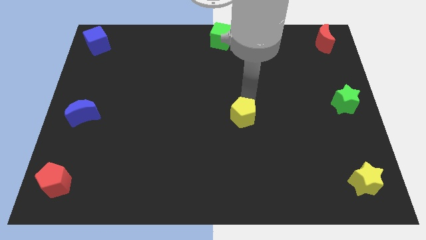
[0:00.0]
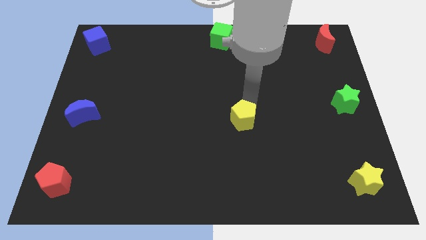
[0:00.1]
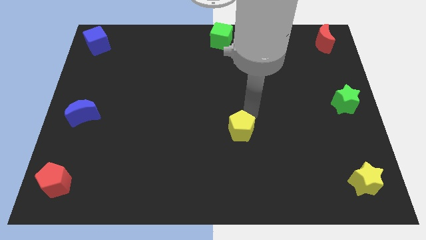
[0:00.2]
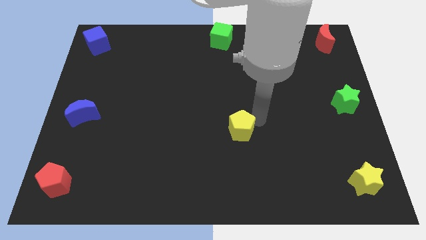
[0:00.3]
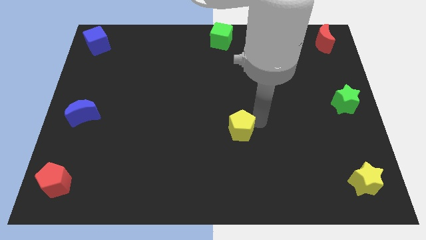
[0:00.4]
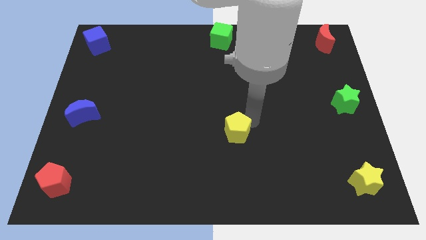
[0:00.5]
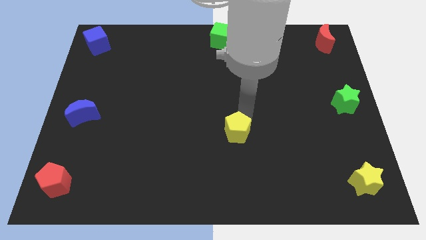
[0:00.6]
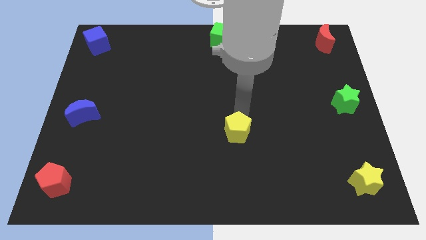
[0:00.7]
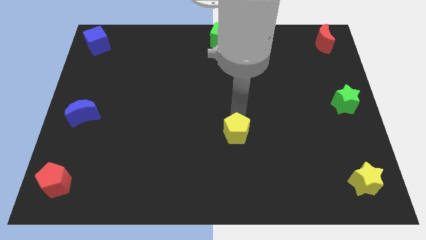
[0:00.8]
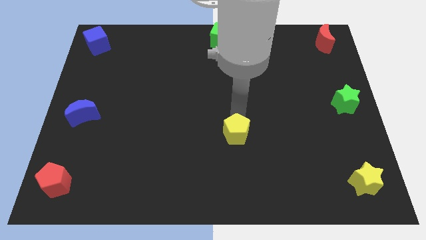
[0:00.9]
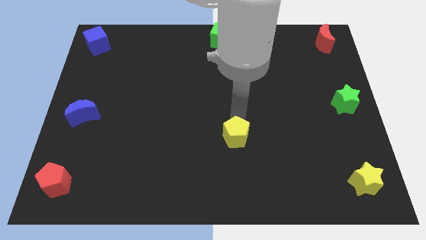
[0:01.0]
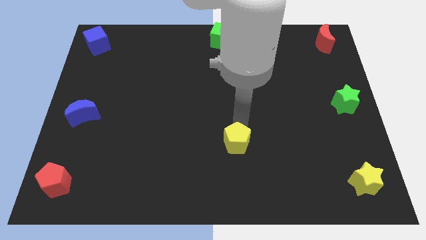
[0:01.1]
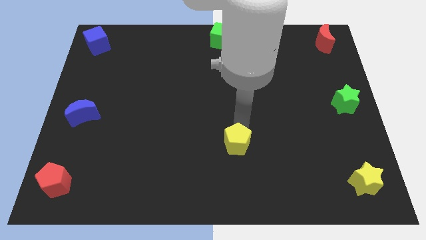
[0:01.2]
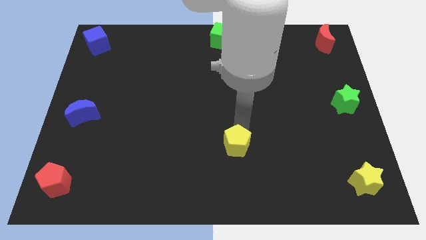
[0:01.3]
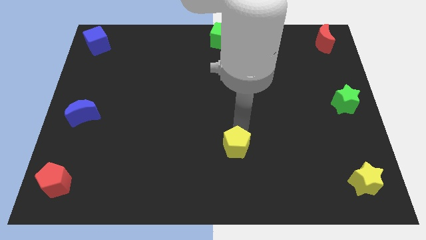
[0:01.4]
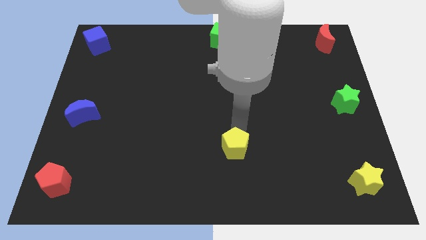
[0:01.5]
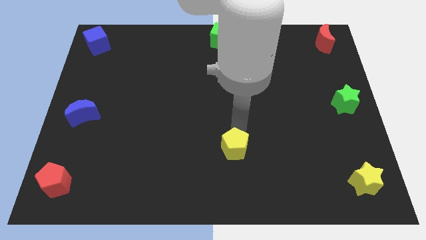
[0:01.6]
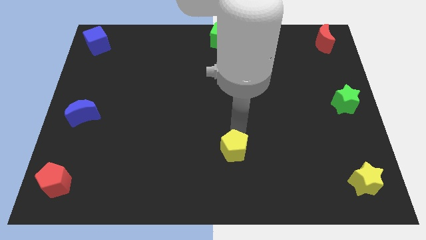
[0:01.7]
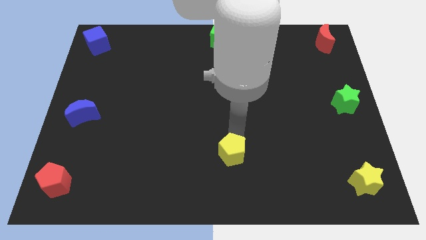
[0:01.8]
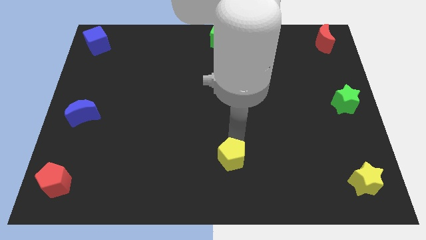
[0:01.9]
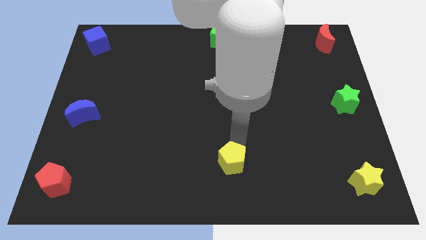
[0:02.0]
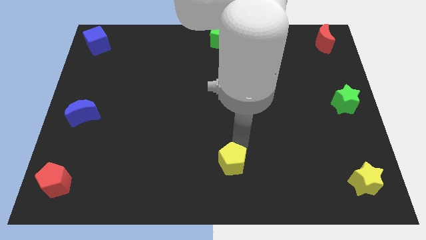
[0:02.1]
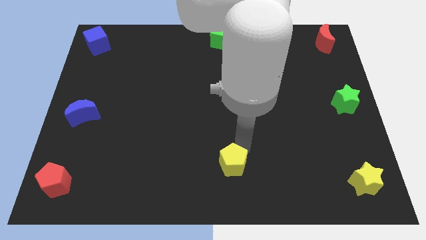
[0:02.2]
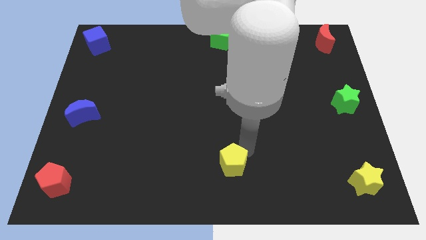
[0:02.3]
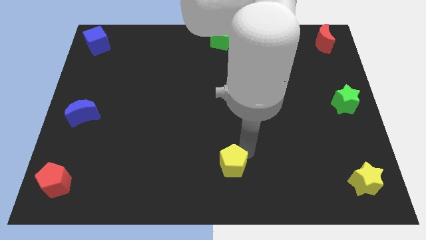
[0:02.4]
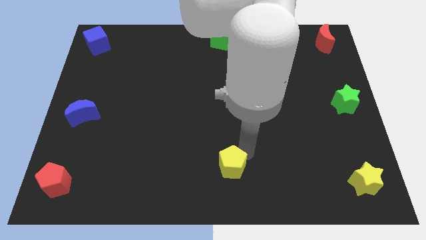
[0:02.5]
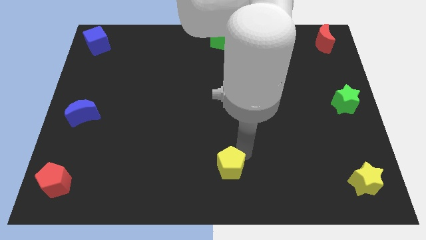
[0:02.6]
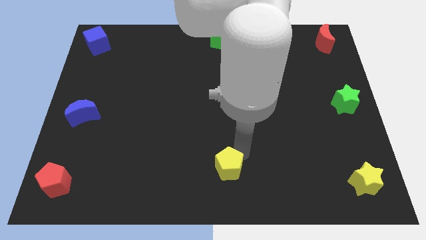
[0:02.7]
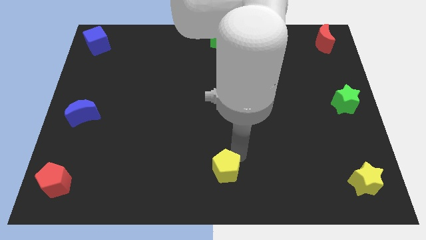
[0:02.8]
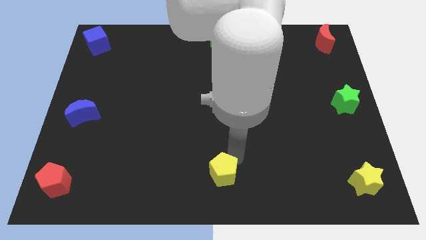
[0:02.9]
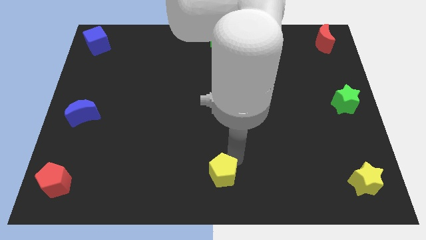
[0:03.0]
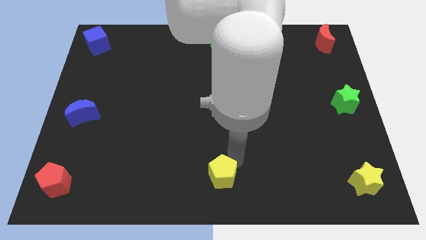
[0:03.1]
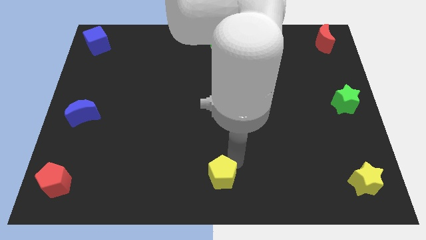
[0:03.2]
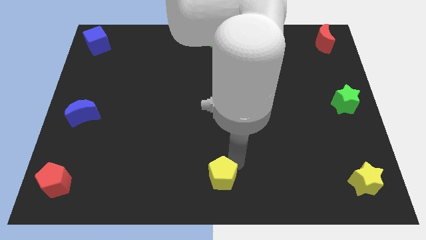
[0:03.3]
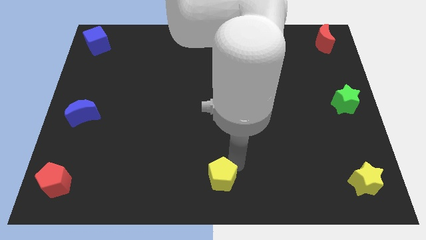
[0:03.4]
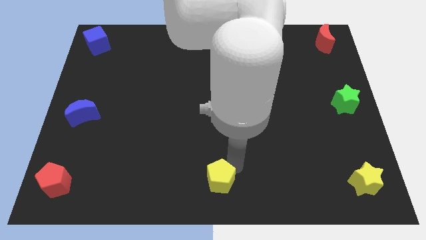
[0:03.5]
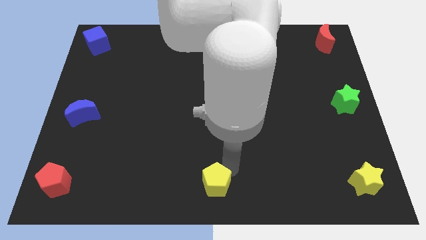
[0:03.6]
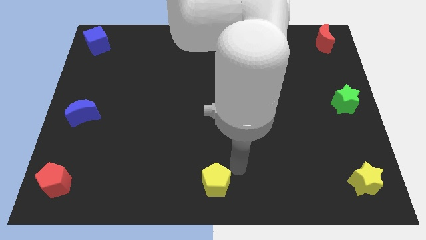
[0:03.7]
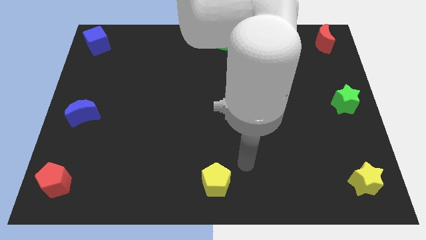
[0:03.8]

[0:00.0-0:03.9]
place the yellow pentagon at the bottom center of the board

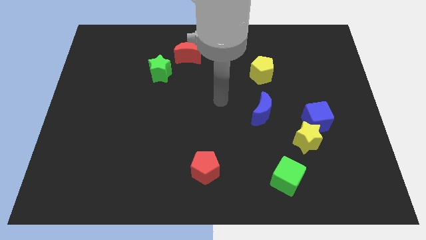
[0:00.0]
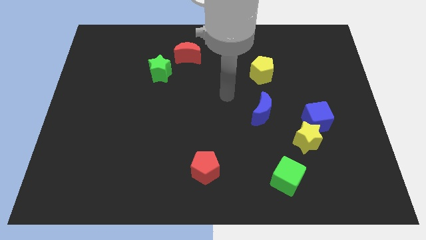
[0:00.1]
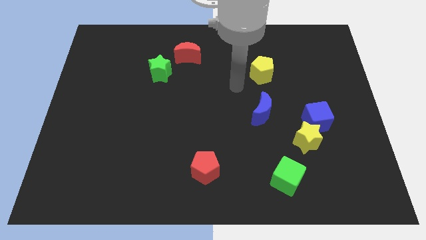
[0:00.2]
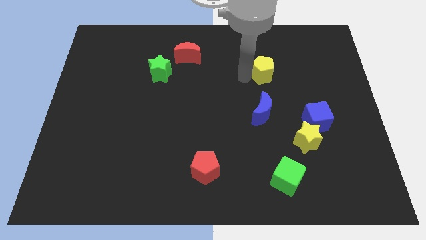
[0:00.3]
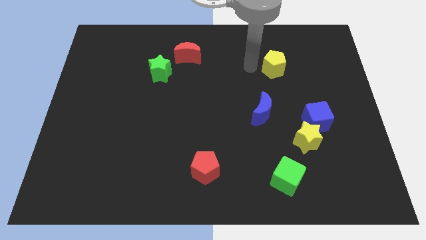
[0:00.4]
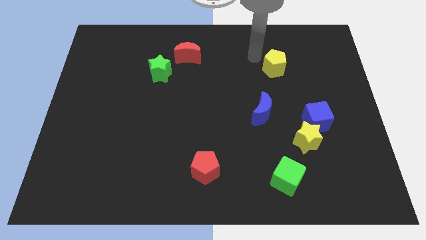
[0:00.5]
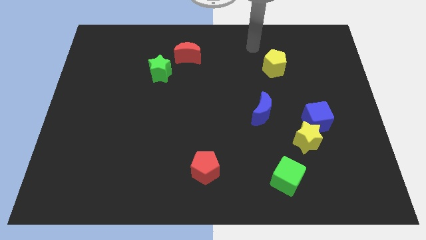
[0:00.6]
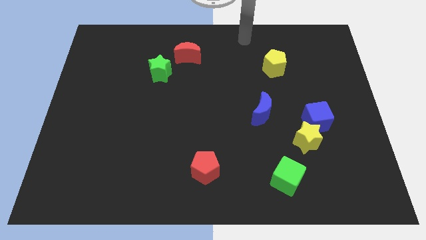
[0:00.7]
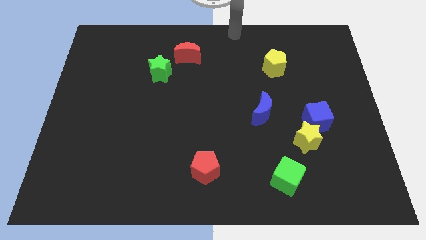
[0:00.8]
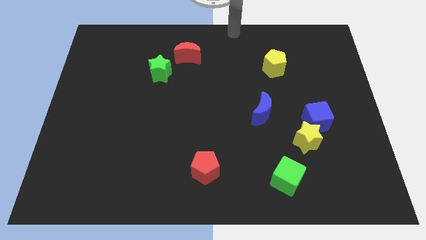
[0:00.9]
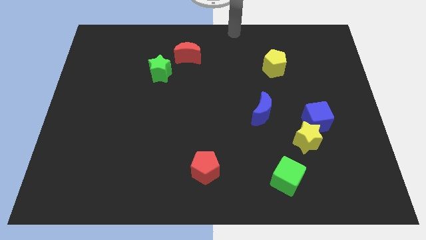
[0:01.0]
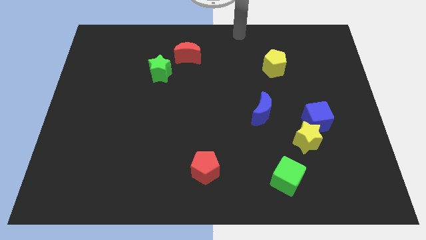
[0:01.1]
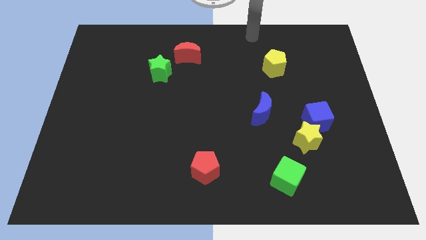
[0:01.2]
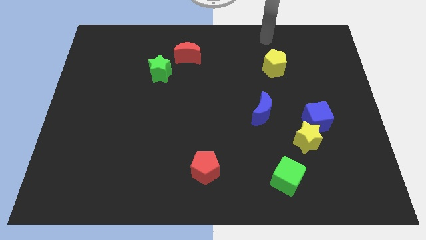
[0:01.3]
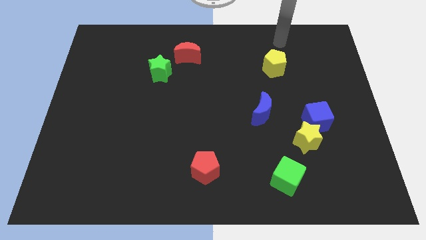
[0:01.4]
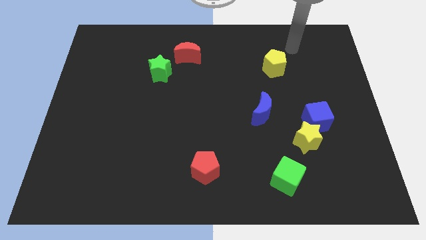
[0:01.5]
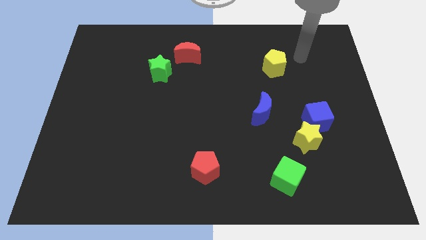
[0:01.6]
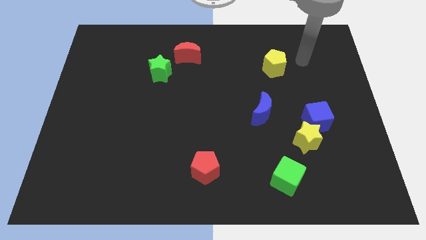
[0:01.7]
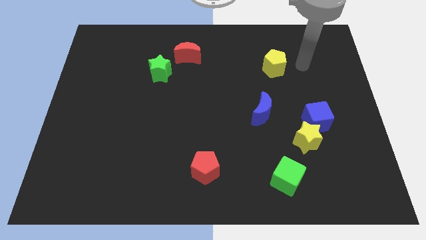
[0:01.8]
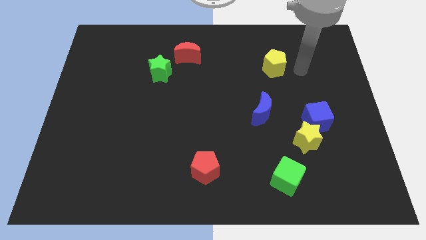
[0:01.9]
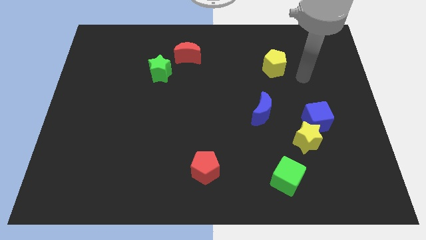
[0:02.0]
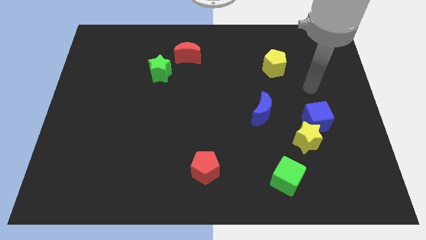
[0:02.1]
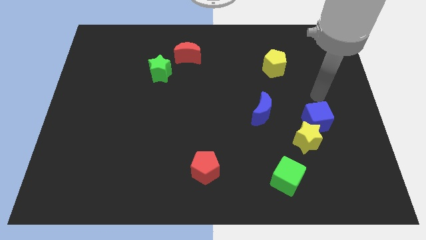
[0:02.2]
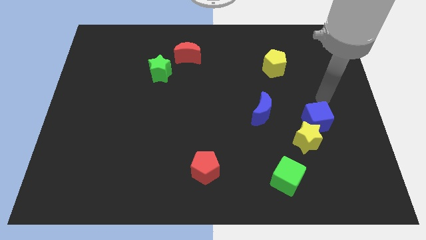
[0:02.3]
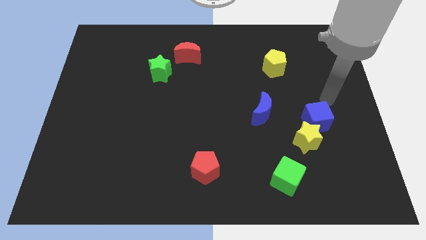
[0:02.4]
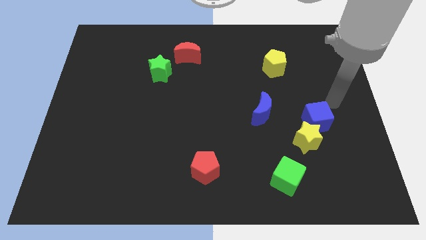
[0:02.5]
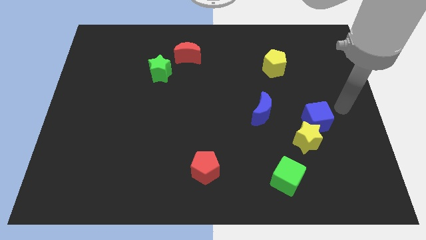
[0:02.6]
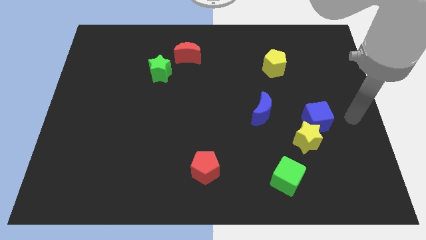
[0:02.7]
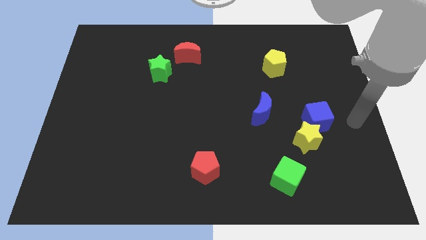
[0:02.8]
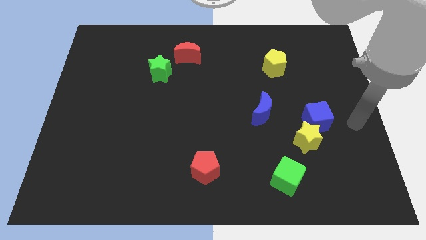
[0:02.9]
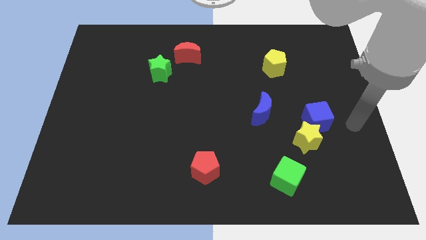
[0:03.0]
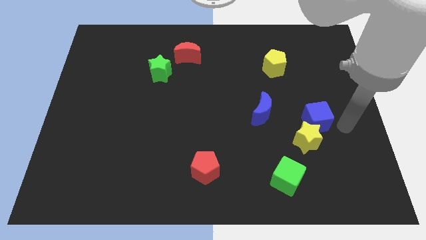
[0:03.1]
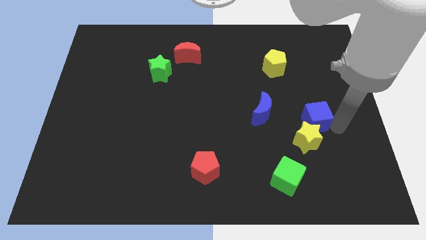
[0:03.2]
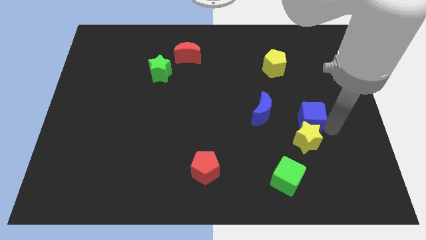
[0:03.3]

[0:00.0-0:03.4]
point your arm right to blue cube

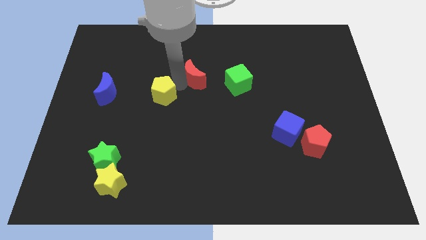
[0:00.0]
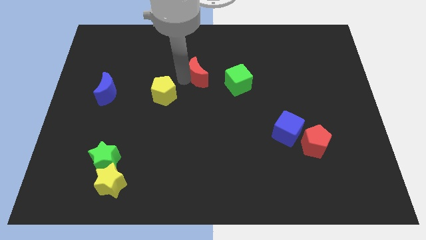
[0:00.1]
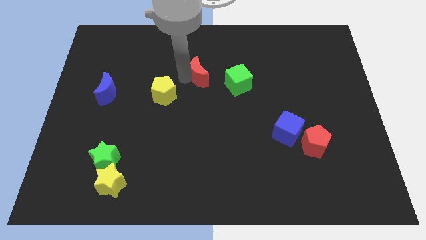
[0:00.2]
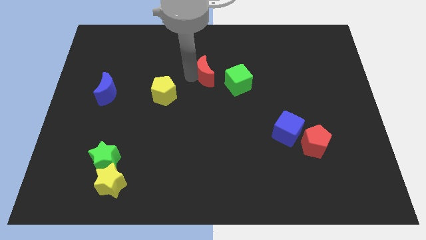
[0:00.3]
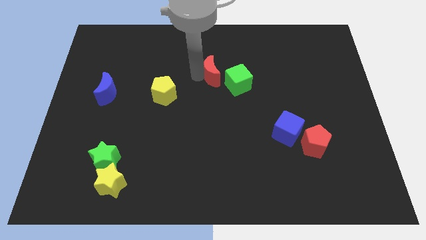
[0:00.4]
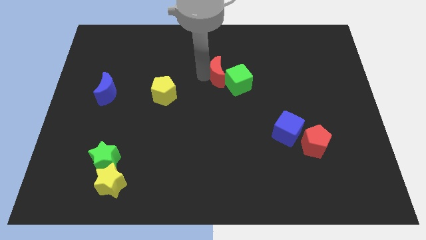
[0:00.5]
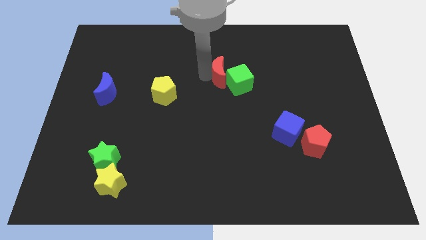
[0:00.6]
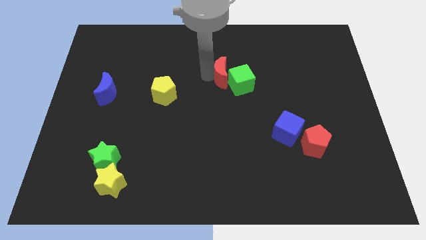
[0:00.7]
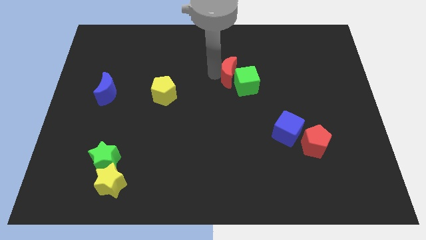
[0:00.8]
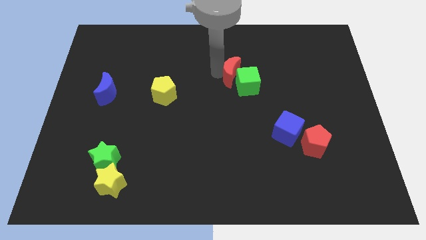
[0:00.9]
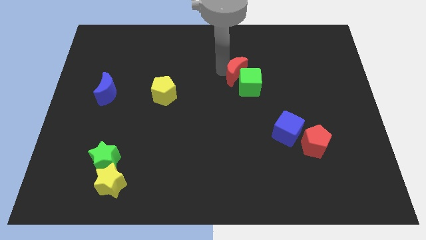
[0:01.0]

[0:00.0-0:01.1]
push red moon into green cube

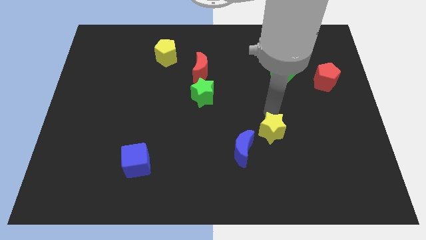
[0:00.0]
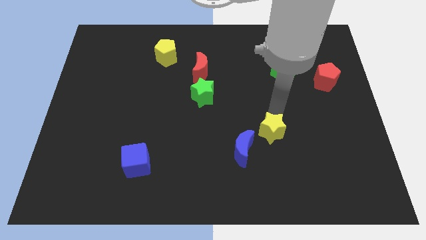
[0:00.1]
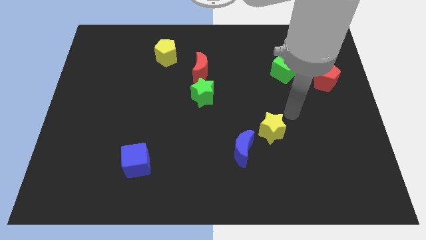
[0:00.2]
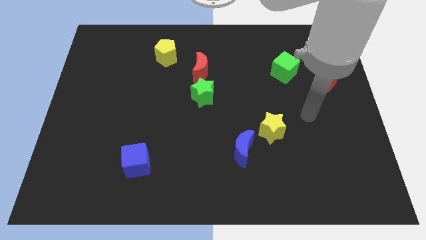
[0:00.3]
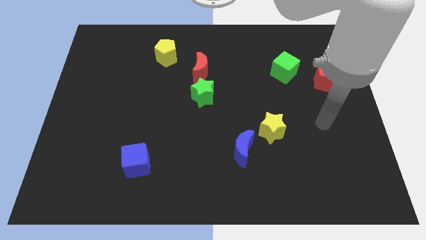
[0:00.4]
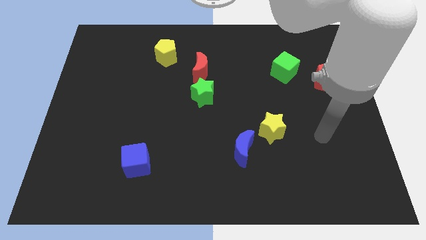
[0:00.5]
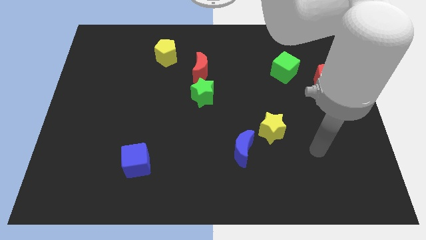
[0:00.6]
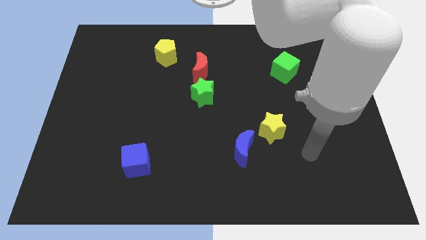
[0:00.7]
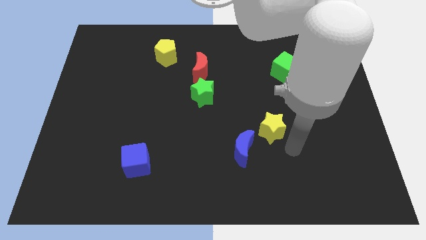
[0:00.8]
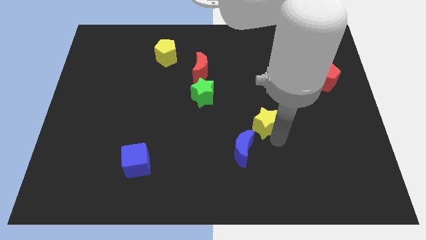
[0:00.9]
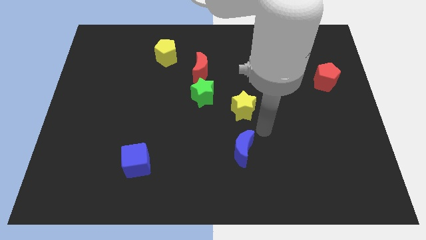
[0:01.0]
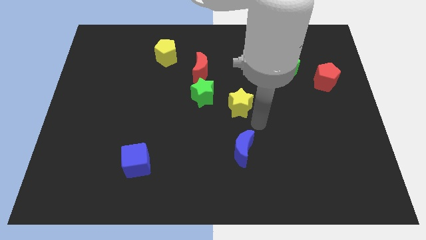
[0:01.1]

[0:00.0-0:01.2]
place the yellow star on the top of the blue moon
